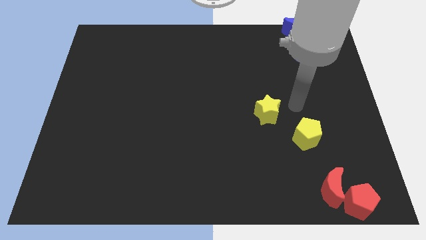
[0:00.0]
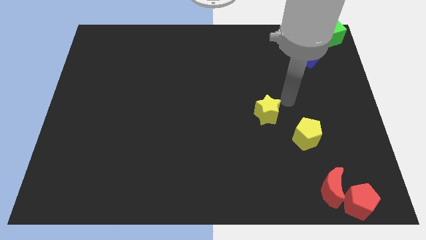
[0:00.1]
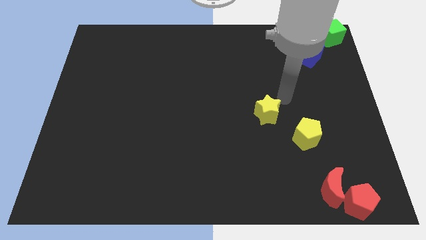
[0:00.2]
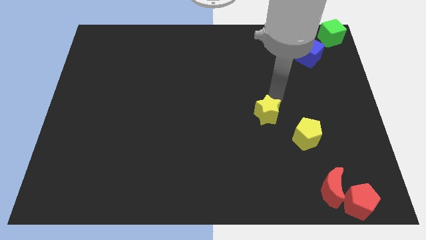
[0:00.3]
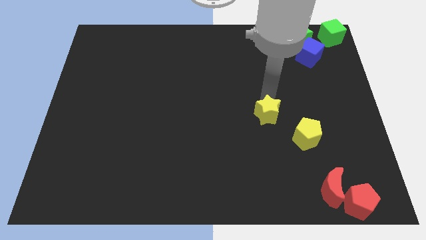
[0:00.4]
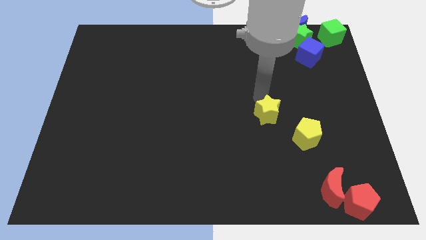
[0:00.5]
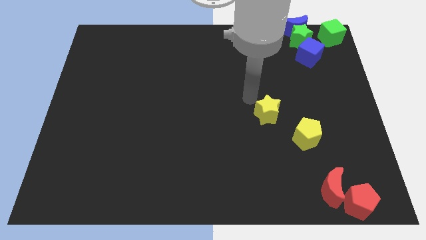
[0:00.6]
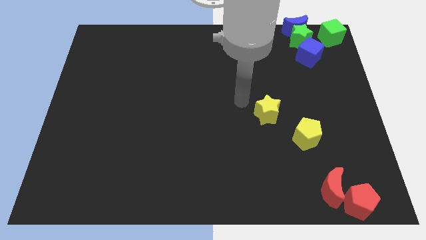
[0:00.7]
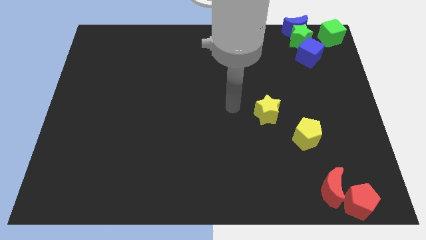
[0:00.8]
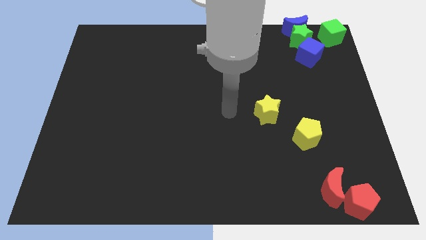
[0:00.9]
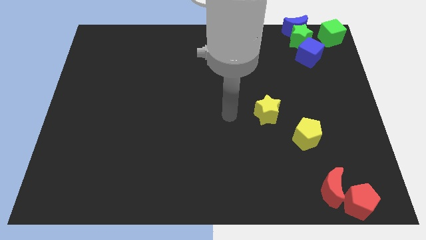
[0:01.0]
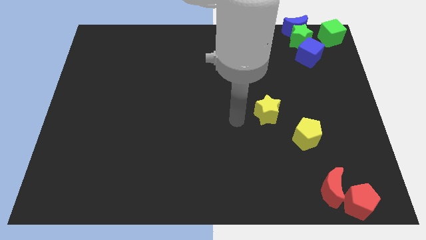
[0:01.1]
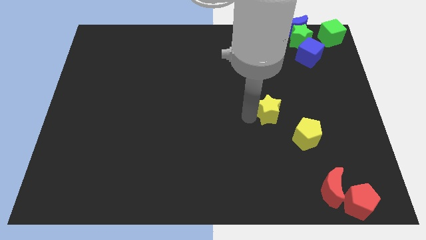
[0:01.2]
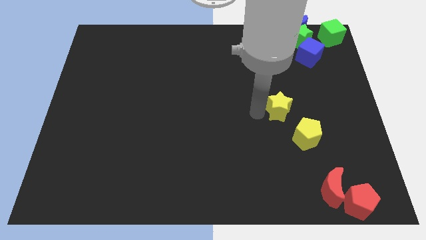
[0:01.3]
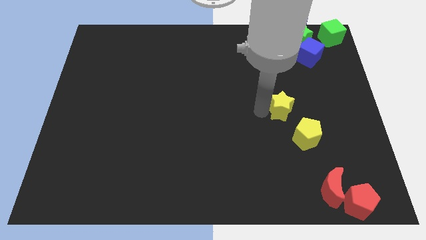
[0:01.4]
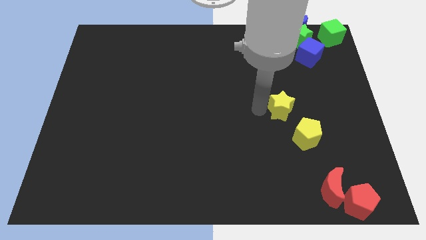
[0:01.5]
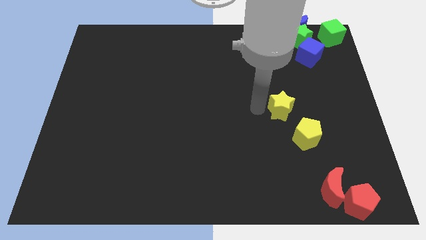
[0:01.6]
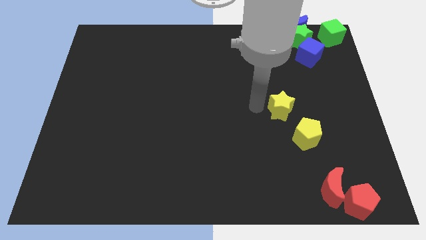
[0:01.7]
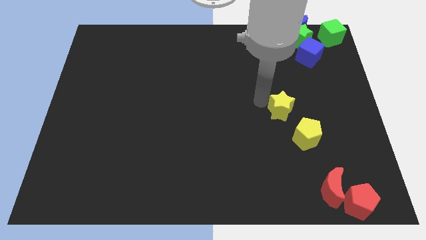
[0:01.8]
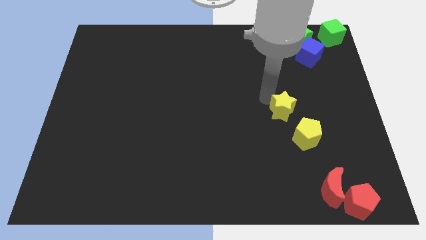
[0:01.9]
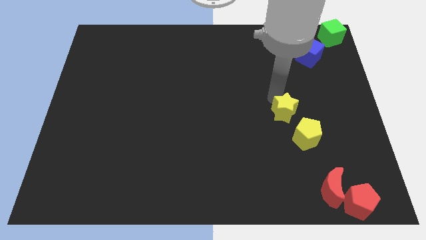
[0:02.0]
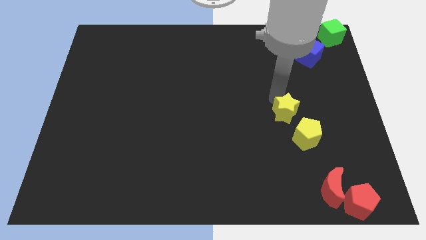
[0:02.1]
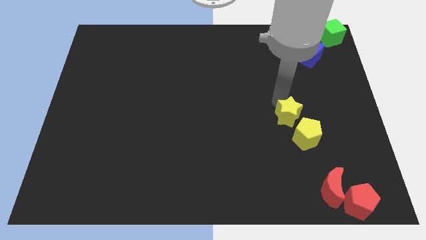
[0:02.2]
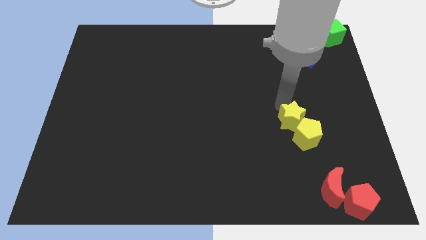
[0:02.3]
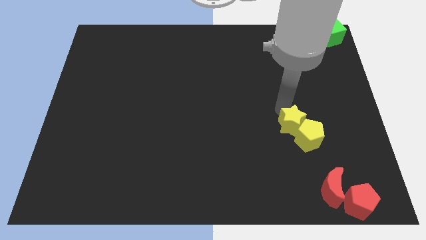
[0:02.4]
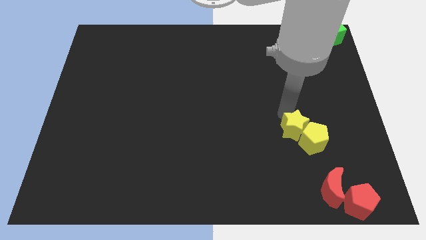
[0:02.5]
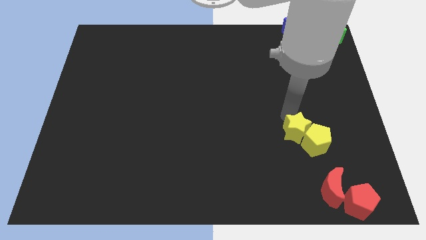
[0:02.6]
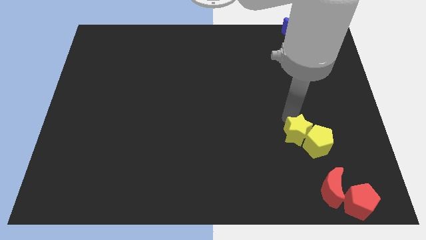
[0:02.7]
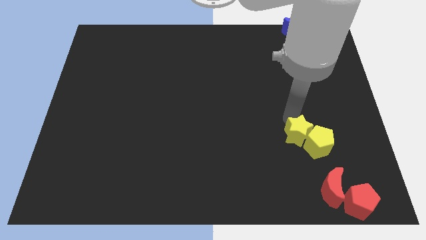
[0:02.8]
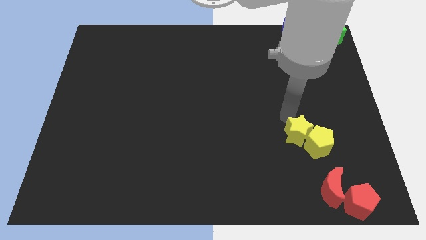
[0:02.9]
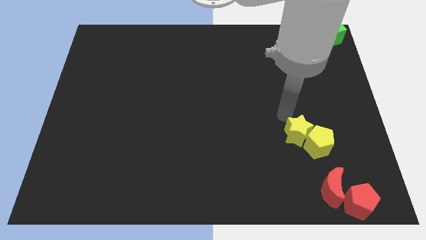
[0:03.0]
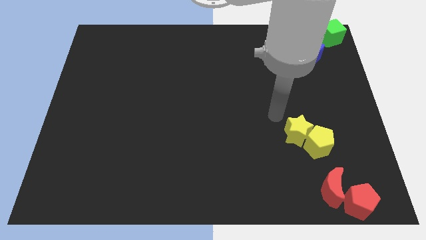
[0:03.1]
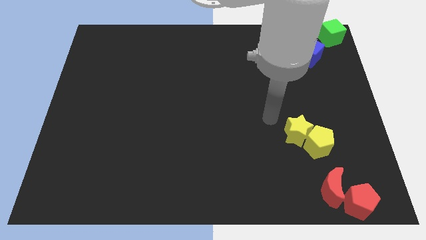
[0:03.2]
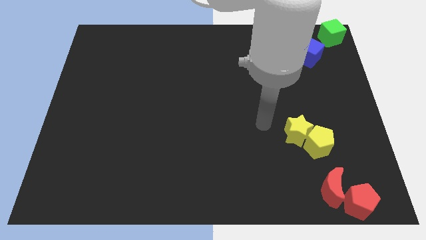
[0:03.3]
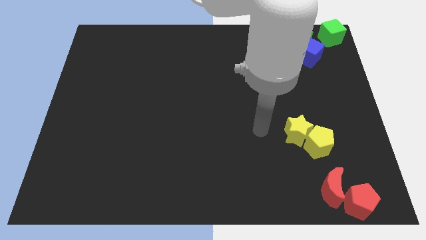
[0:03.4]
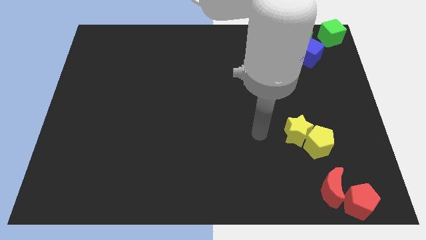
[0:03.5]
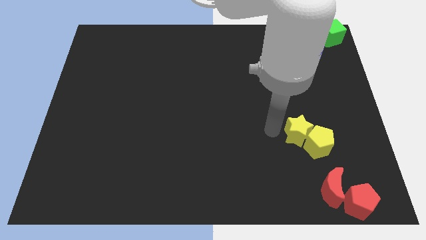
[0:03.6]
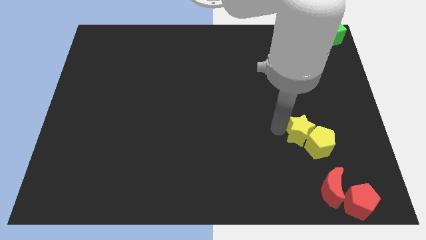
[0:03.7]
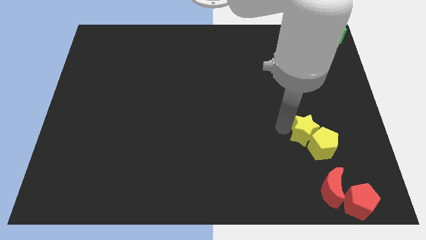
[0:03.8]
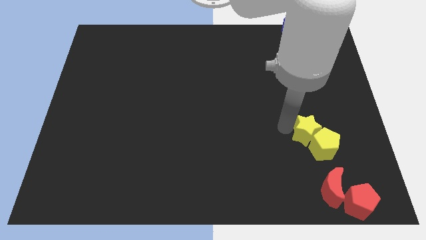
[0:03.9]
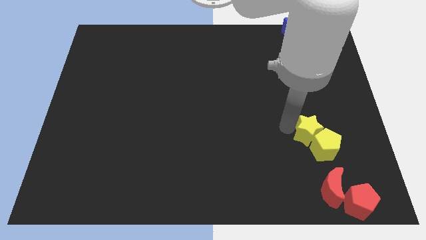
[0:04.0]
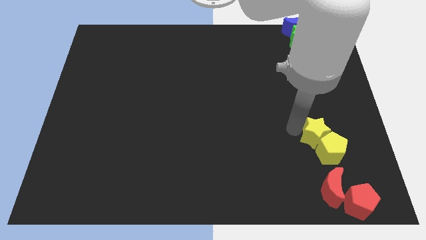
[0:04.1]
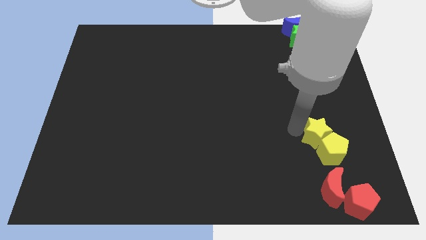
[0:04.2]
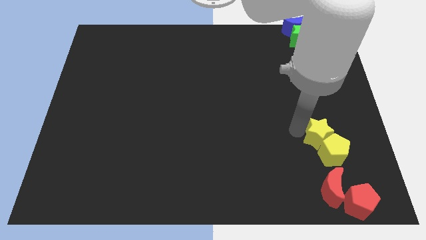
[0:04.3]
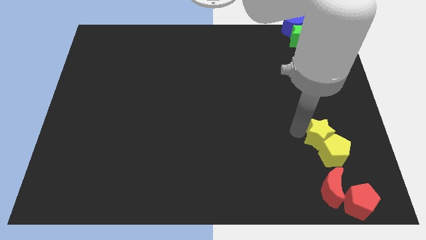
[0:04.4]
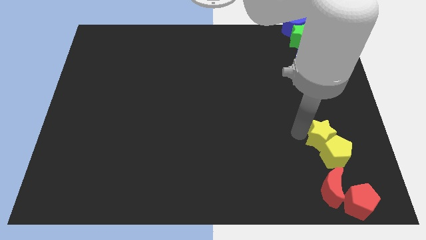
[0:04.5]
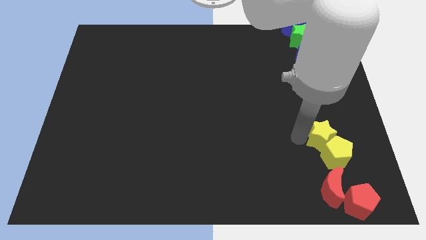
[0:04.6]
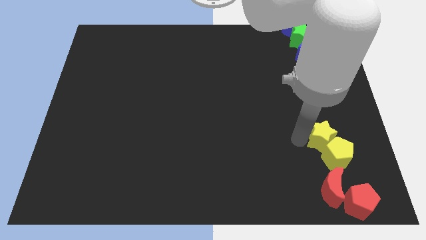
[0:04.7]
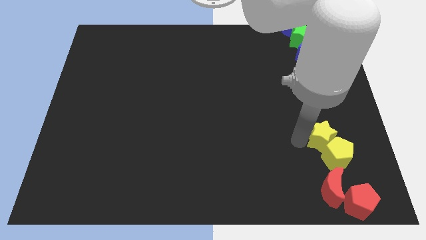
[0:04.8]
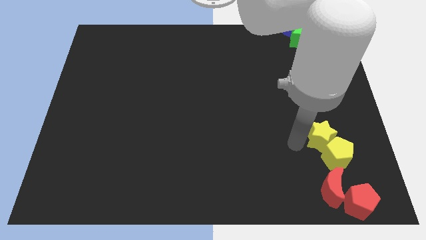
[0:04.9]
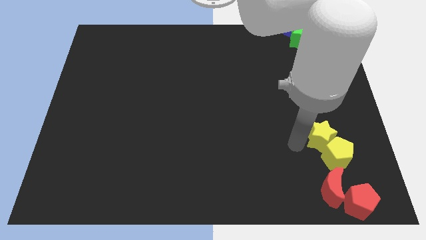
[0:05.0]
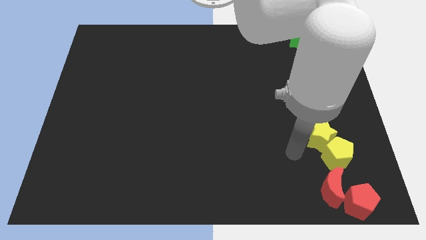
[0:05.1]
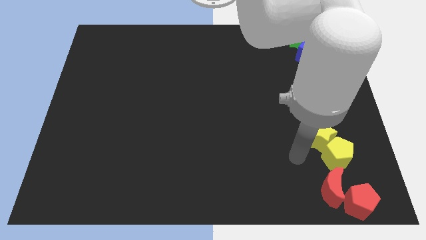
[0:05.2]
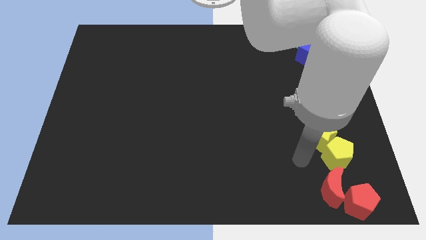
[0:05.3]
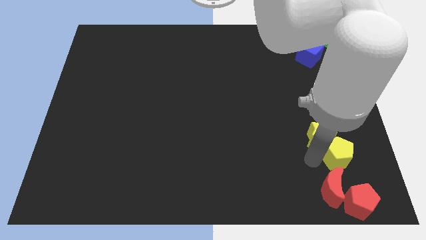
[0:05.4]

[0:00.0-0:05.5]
move the yellow blocks to the top of the red crescent

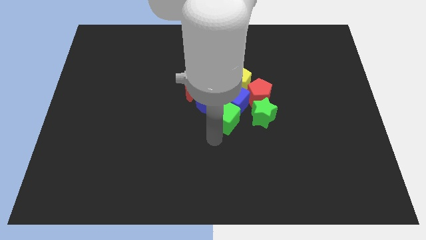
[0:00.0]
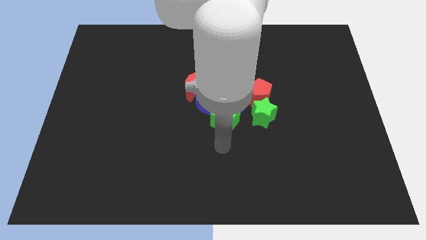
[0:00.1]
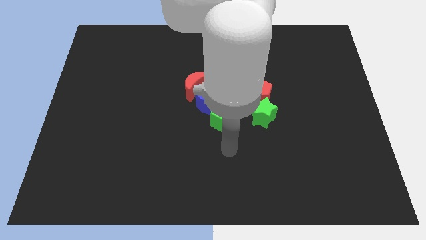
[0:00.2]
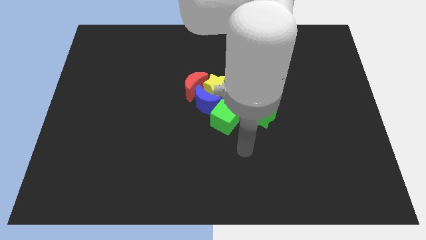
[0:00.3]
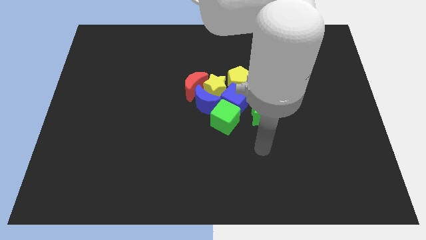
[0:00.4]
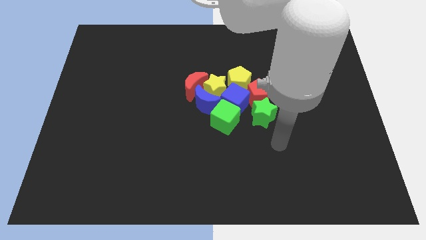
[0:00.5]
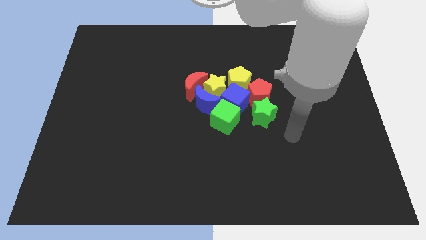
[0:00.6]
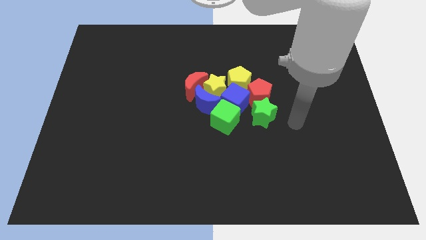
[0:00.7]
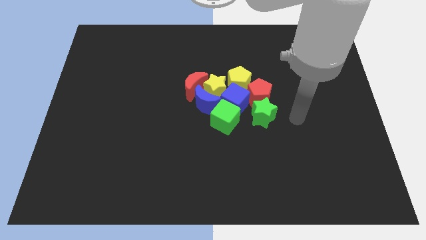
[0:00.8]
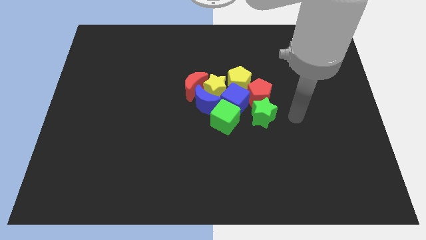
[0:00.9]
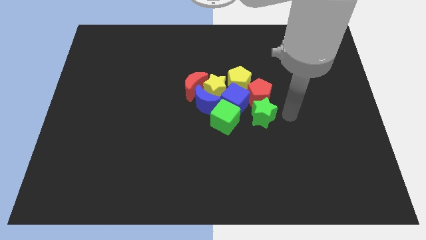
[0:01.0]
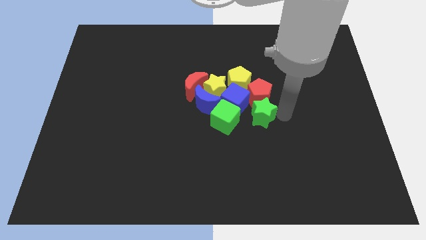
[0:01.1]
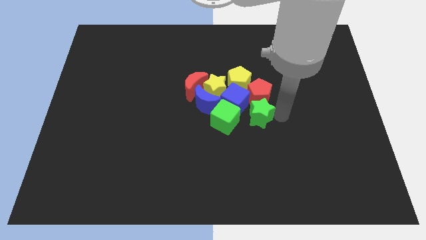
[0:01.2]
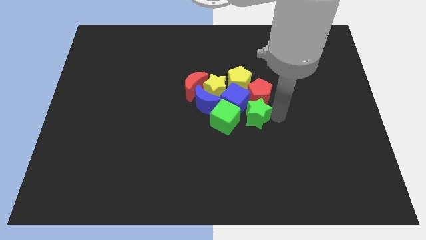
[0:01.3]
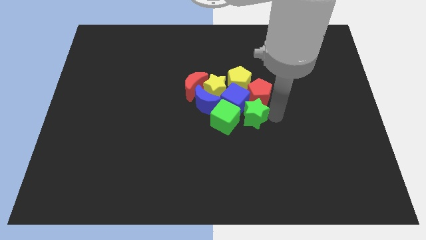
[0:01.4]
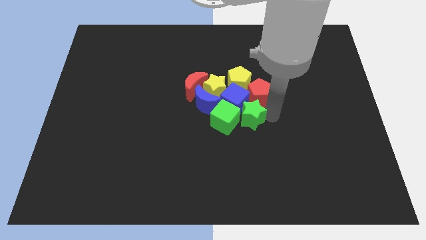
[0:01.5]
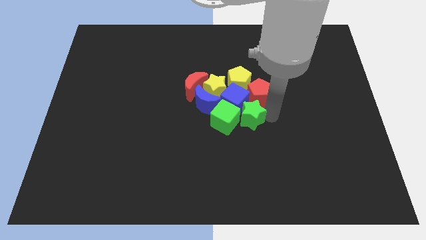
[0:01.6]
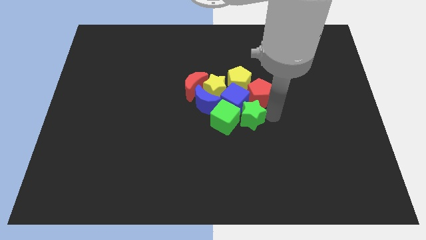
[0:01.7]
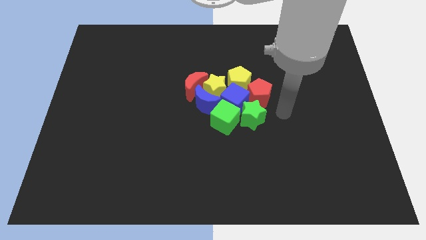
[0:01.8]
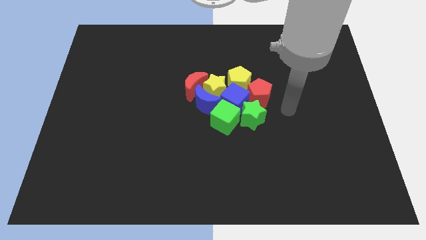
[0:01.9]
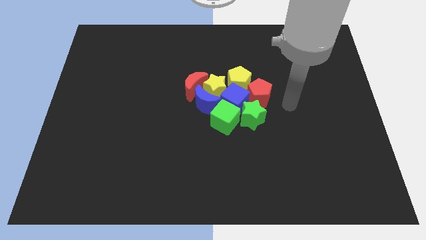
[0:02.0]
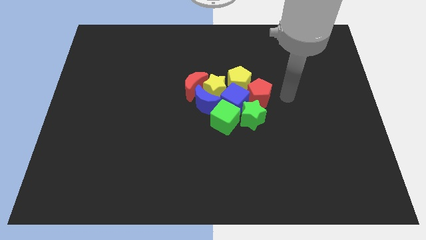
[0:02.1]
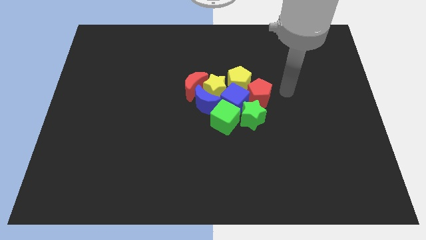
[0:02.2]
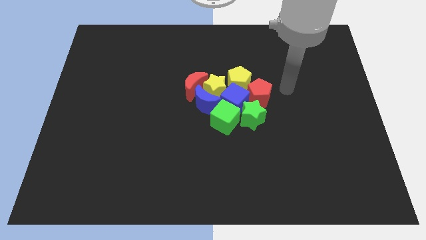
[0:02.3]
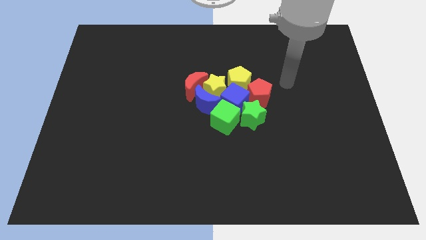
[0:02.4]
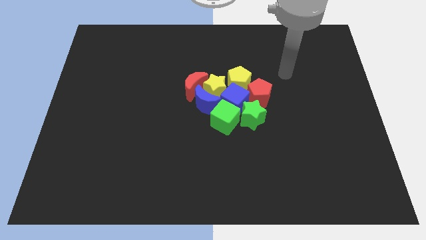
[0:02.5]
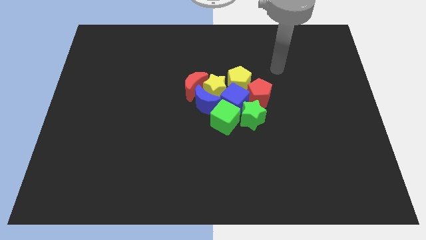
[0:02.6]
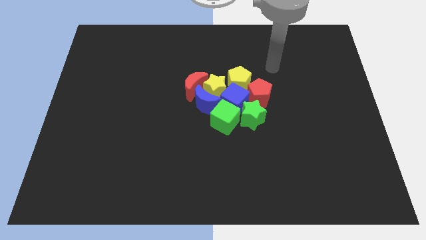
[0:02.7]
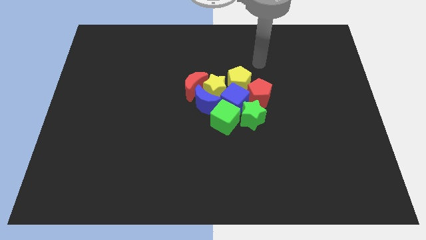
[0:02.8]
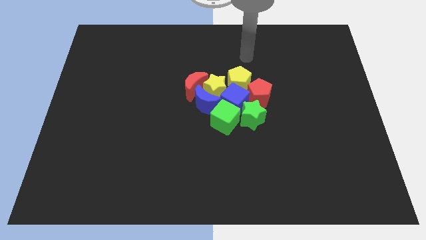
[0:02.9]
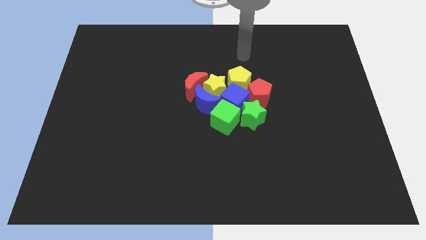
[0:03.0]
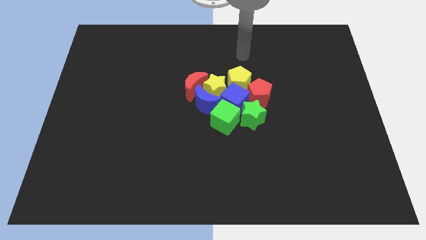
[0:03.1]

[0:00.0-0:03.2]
move the green star top right to the green cube

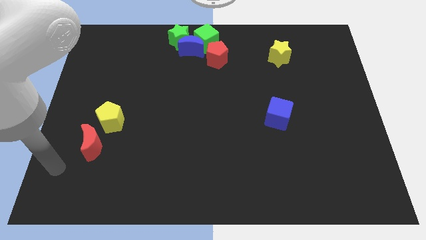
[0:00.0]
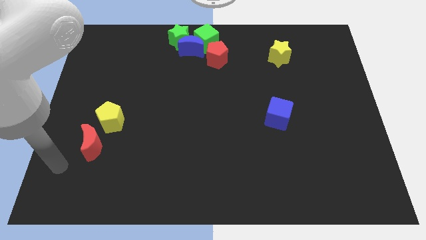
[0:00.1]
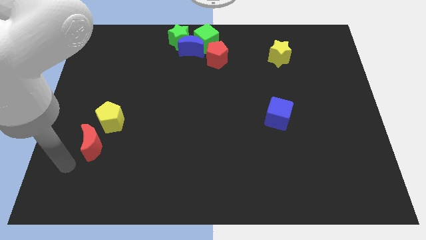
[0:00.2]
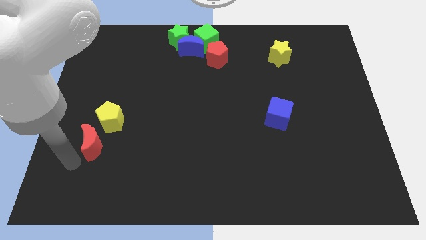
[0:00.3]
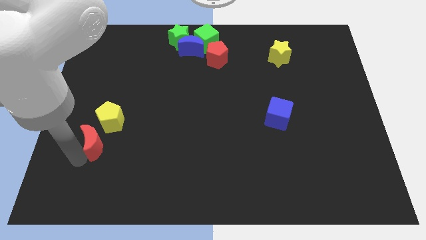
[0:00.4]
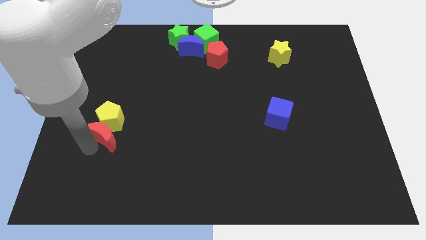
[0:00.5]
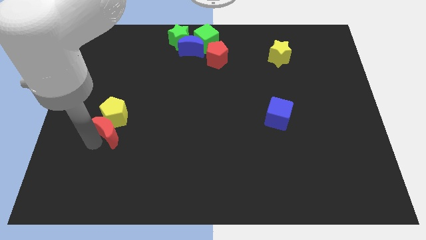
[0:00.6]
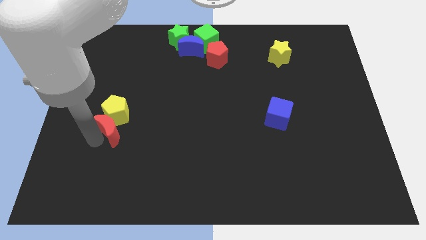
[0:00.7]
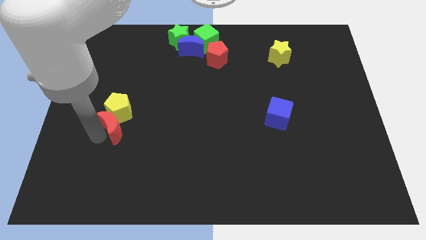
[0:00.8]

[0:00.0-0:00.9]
place red moon to the bottom of yellow pentagon
